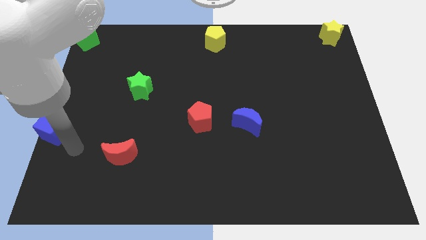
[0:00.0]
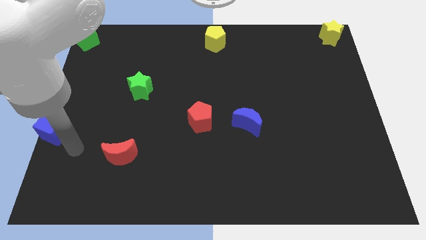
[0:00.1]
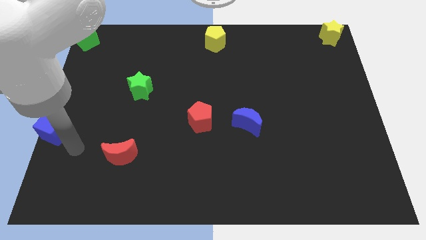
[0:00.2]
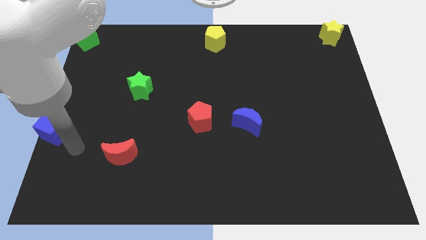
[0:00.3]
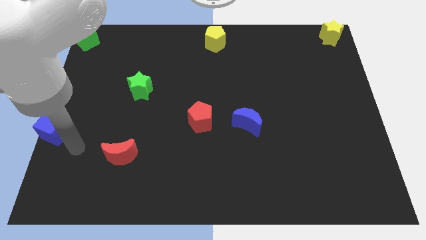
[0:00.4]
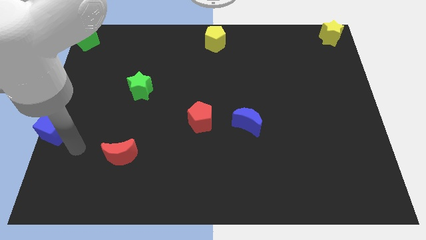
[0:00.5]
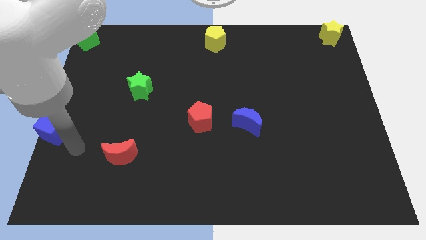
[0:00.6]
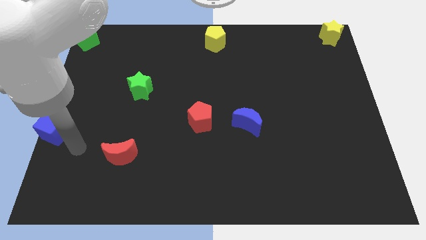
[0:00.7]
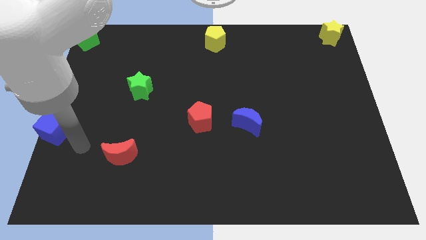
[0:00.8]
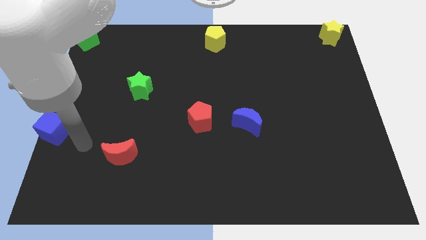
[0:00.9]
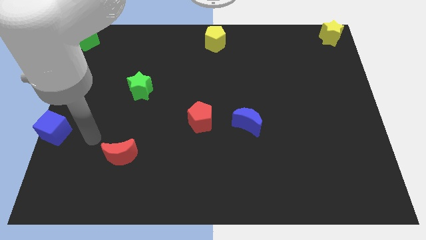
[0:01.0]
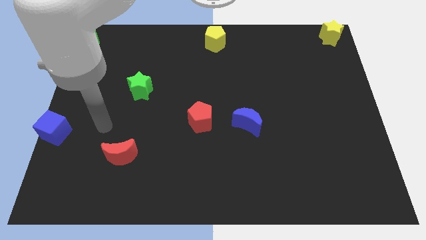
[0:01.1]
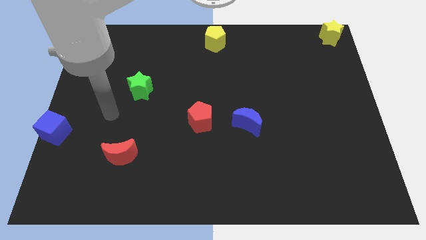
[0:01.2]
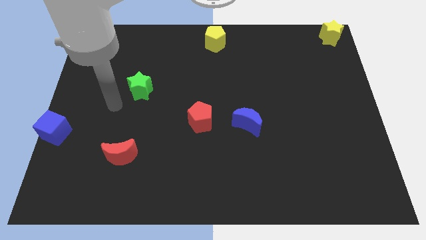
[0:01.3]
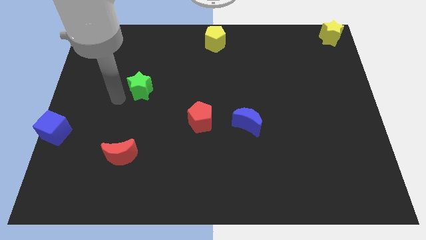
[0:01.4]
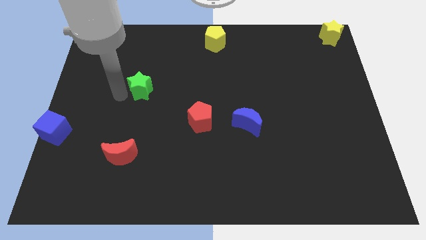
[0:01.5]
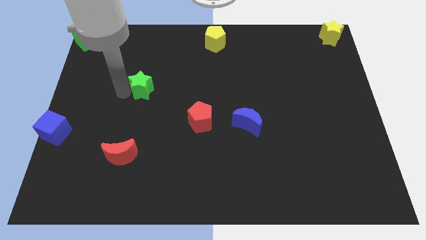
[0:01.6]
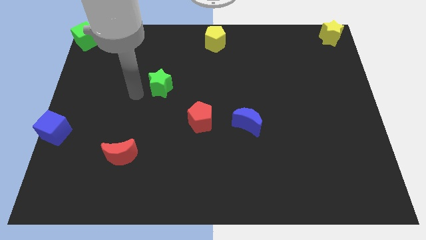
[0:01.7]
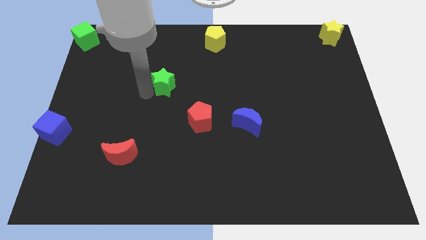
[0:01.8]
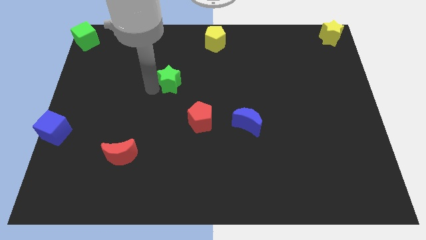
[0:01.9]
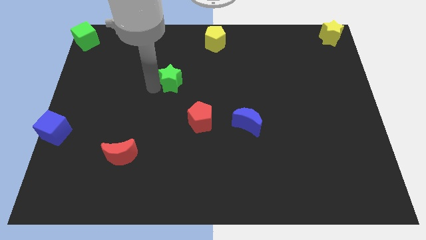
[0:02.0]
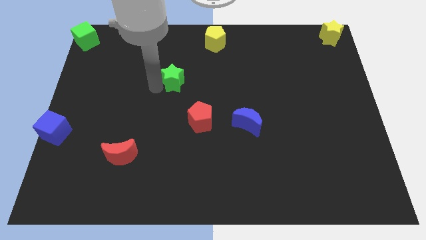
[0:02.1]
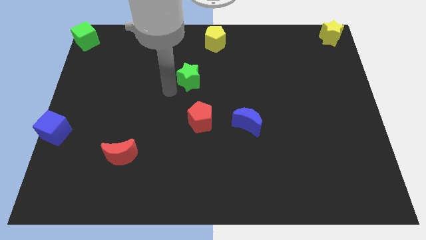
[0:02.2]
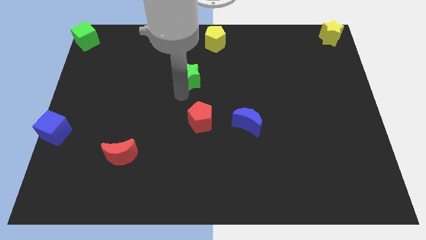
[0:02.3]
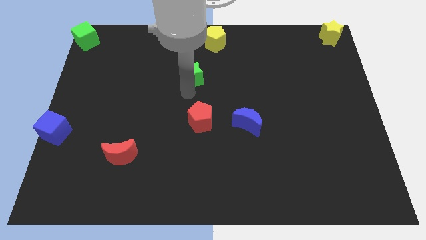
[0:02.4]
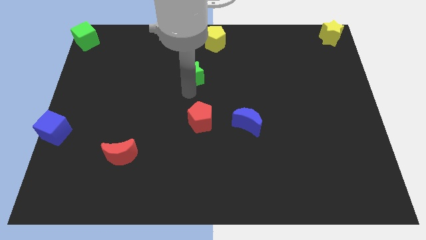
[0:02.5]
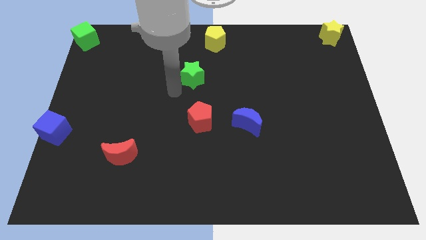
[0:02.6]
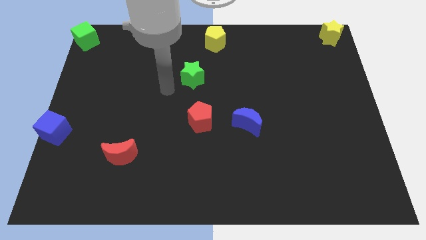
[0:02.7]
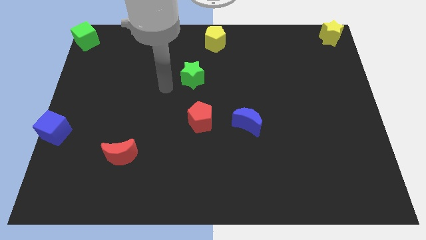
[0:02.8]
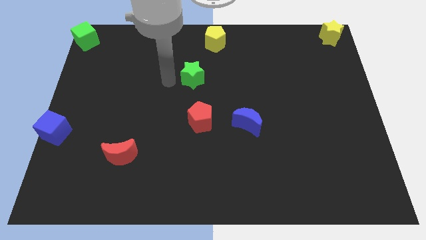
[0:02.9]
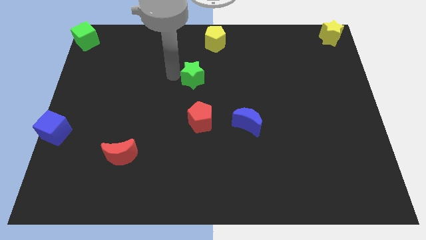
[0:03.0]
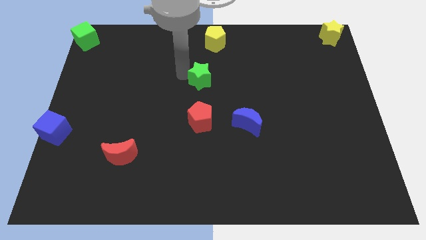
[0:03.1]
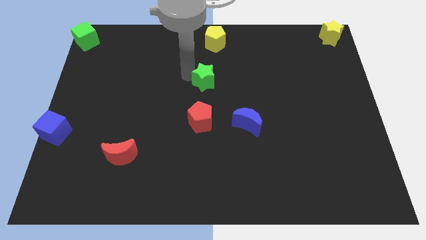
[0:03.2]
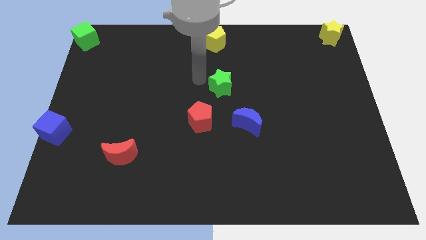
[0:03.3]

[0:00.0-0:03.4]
place the green star in between the yellow pentagon and red pentagon

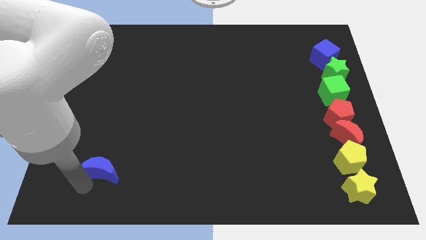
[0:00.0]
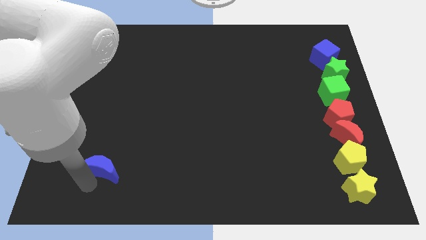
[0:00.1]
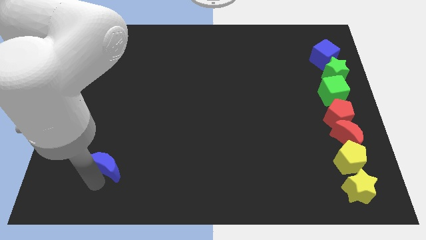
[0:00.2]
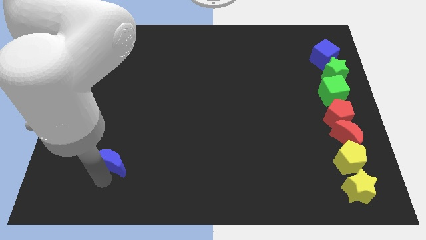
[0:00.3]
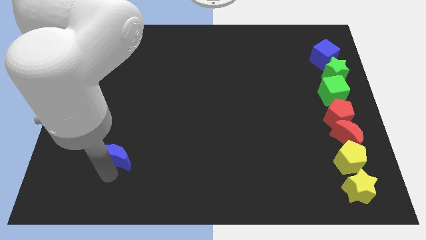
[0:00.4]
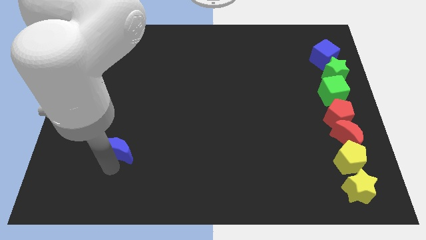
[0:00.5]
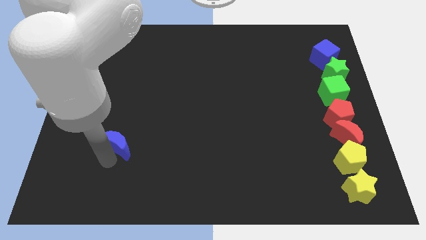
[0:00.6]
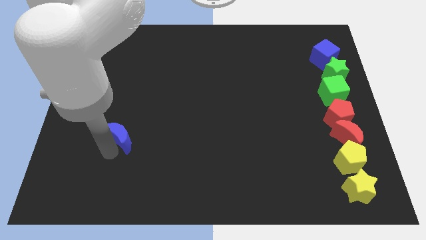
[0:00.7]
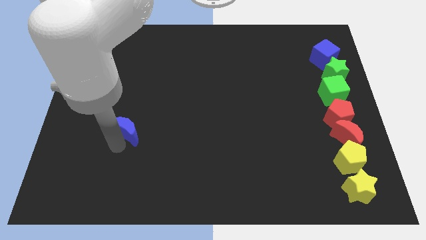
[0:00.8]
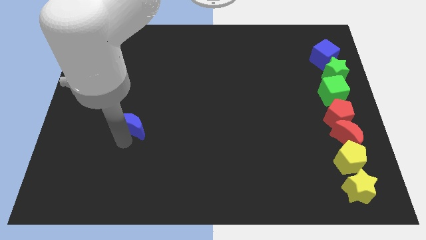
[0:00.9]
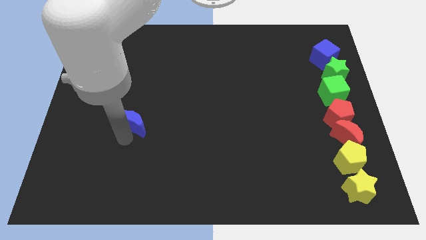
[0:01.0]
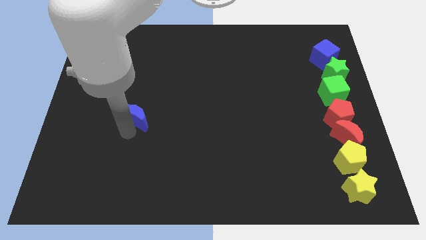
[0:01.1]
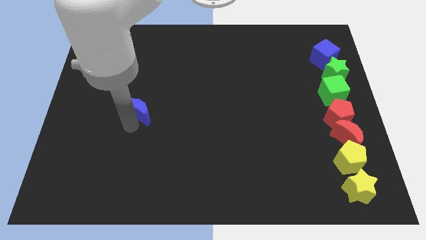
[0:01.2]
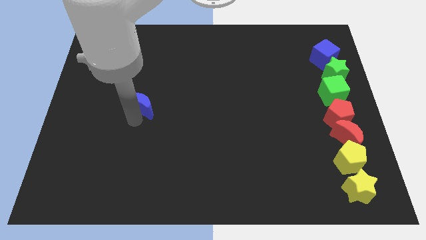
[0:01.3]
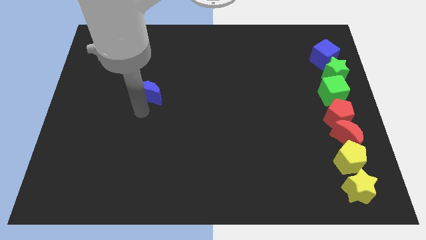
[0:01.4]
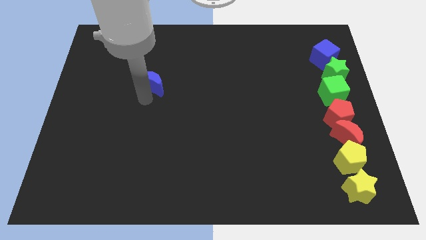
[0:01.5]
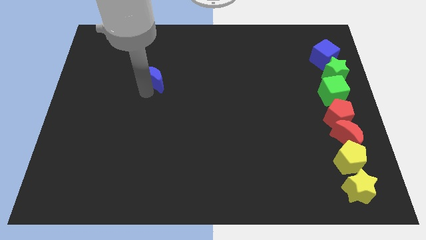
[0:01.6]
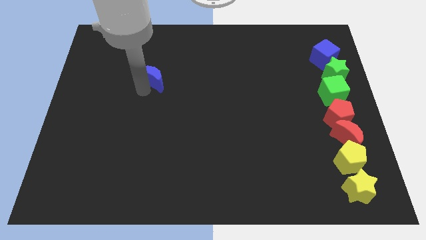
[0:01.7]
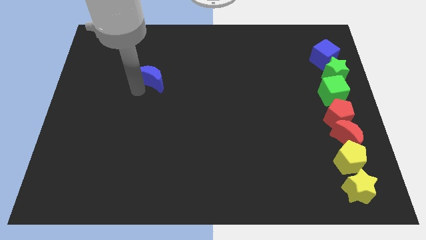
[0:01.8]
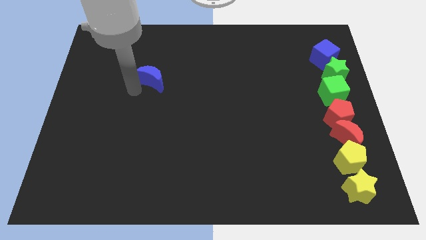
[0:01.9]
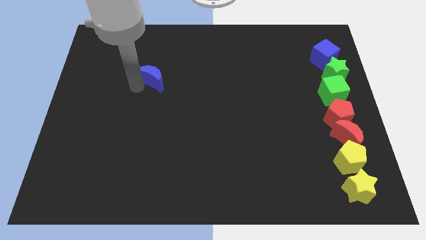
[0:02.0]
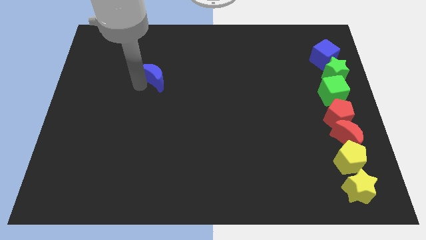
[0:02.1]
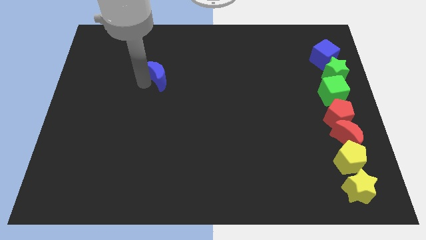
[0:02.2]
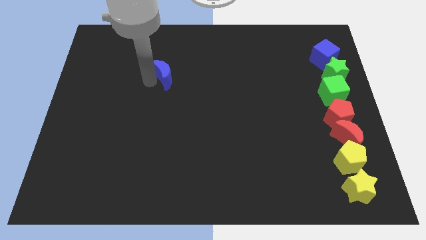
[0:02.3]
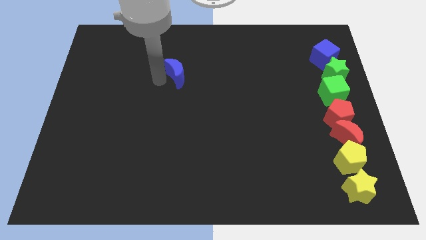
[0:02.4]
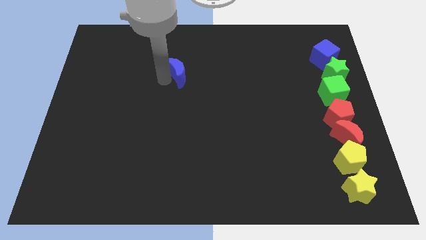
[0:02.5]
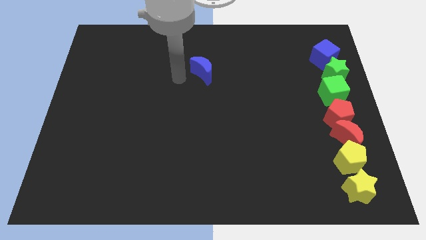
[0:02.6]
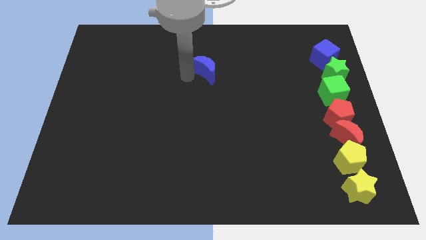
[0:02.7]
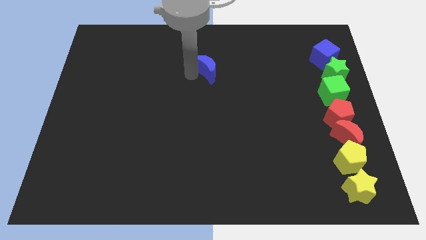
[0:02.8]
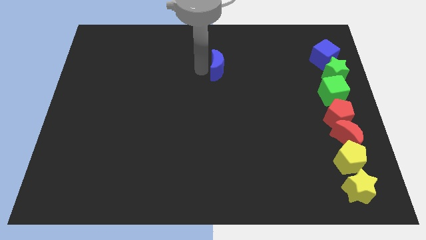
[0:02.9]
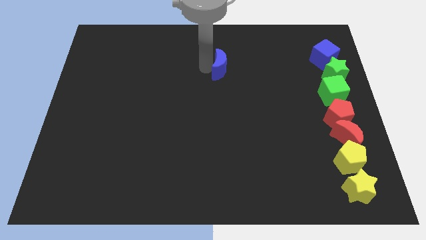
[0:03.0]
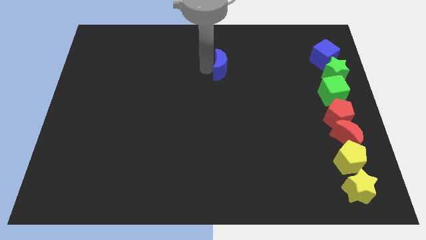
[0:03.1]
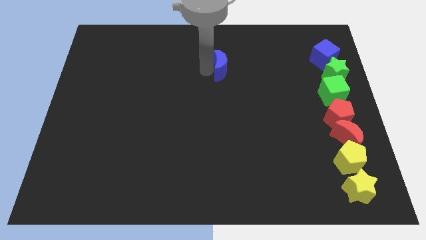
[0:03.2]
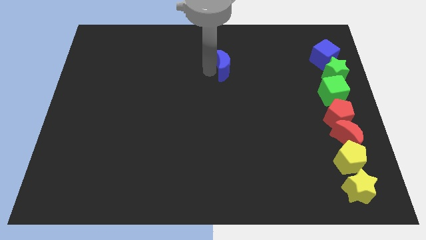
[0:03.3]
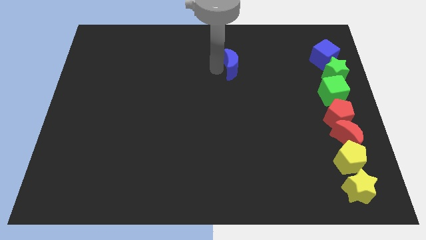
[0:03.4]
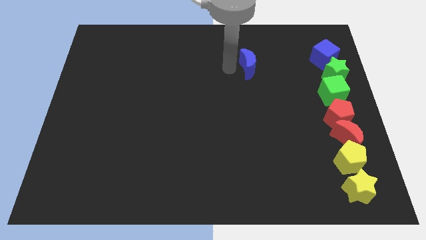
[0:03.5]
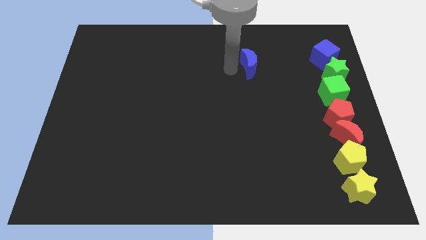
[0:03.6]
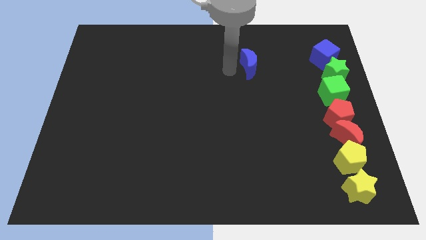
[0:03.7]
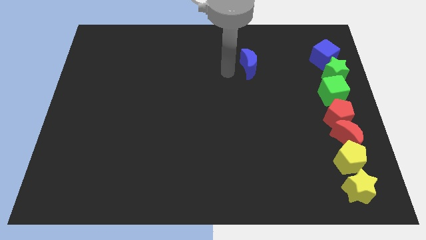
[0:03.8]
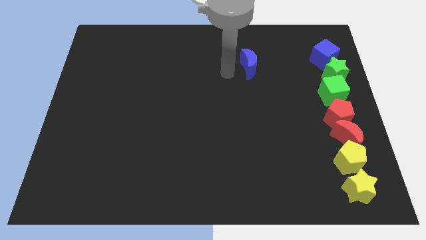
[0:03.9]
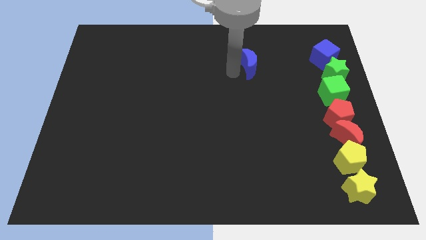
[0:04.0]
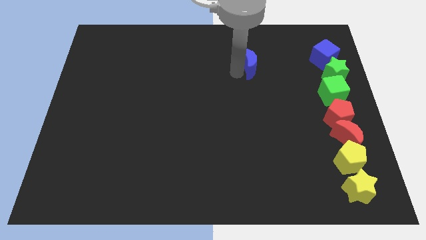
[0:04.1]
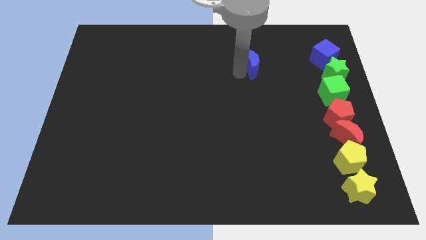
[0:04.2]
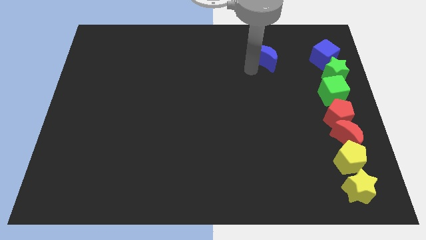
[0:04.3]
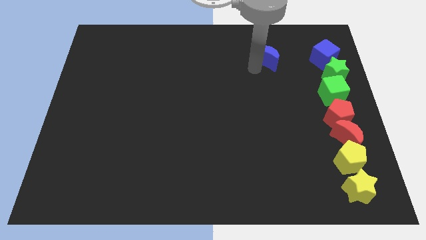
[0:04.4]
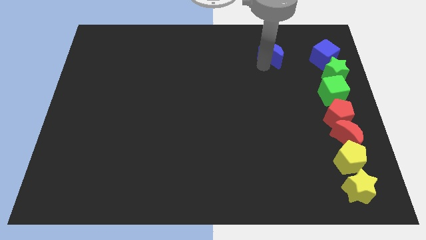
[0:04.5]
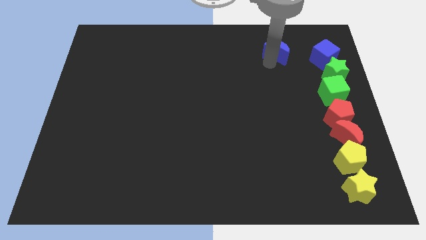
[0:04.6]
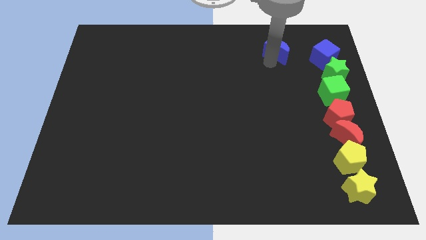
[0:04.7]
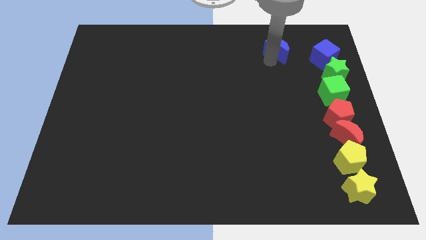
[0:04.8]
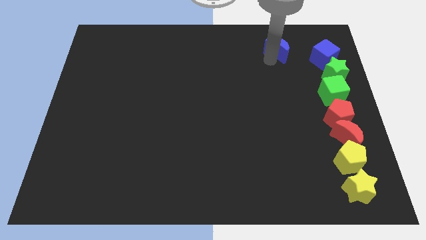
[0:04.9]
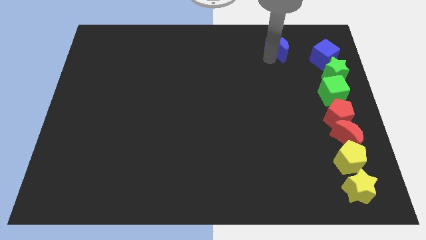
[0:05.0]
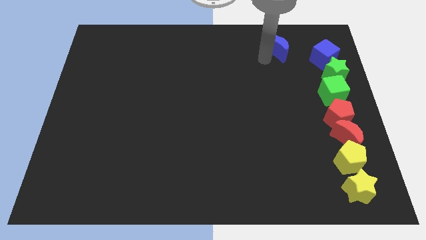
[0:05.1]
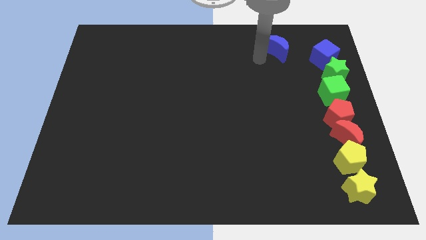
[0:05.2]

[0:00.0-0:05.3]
move the blue crescent parallel to the blue cube

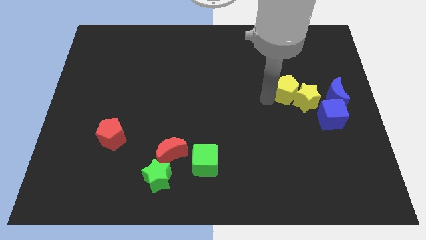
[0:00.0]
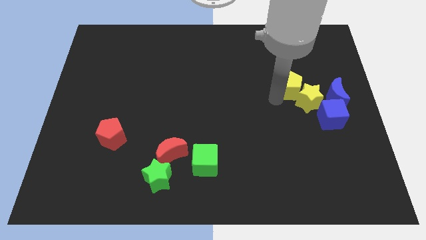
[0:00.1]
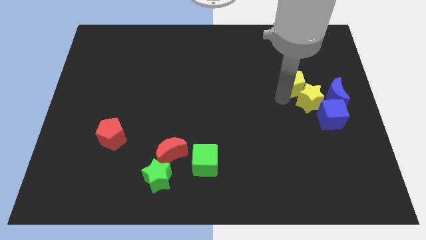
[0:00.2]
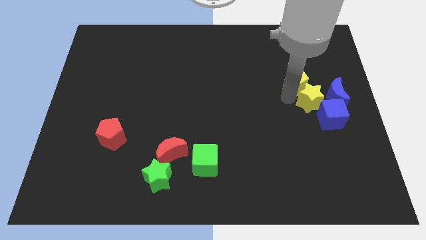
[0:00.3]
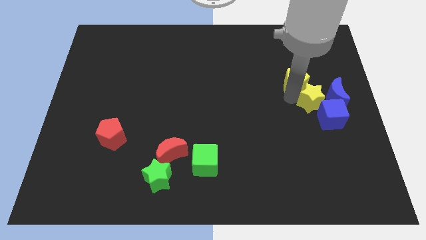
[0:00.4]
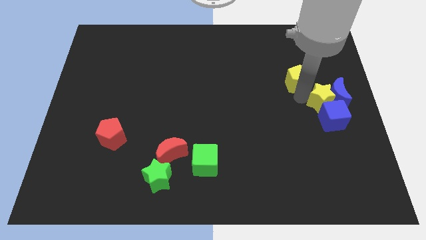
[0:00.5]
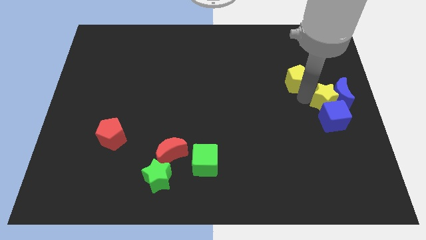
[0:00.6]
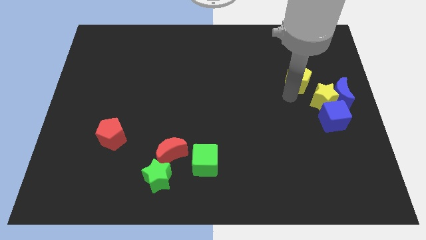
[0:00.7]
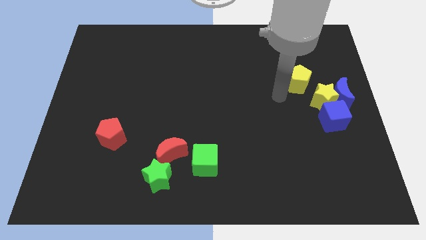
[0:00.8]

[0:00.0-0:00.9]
separate the yellow pentagon from the yellow star
